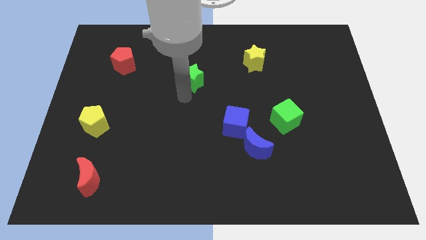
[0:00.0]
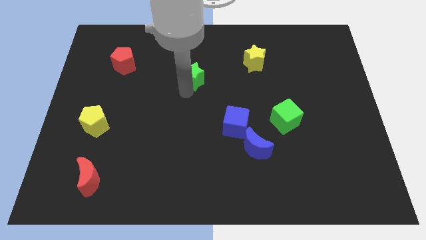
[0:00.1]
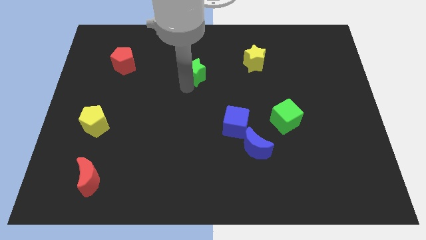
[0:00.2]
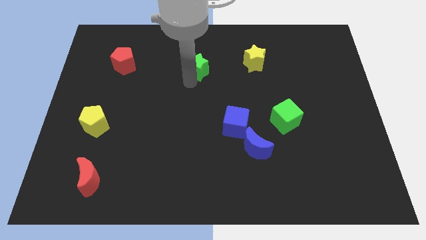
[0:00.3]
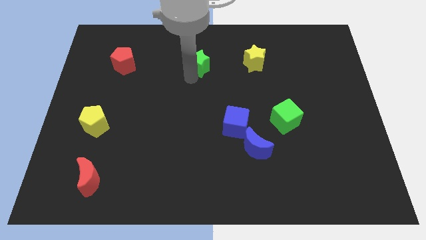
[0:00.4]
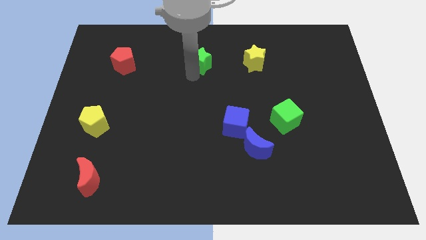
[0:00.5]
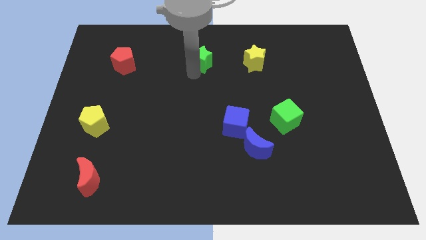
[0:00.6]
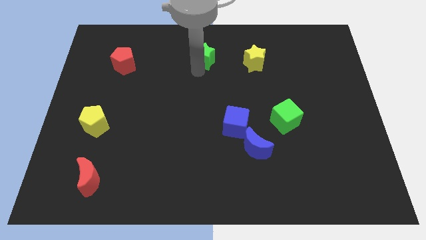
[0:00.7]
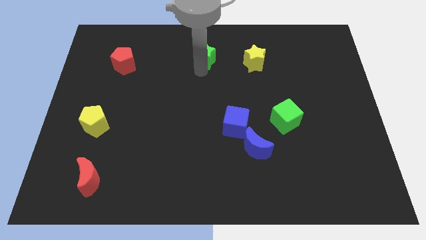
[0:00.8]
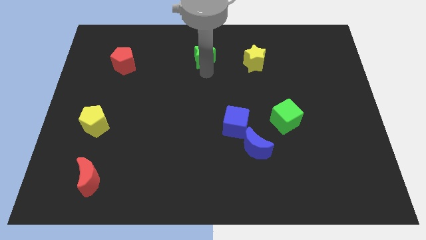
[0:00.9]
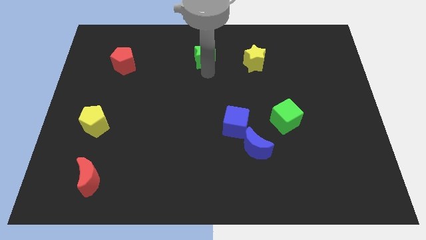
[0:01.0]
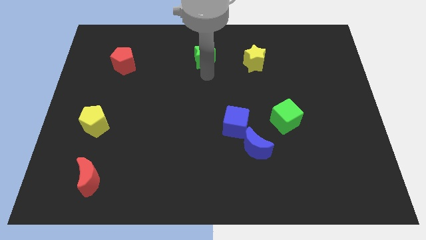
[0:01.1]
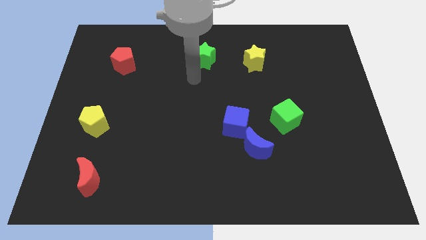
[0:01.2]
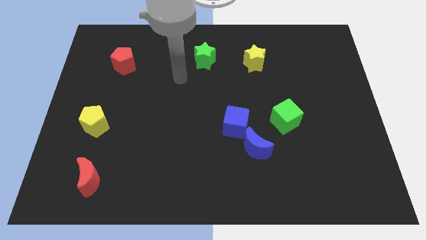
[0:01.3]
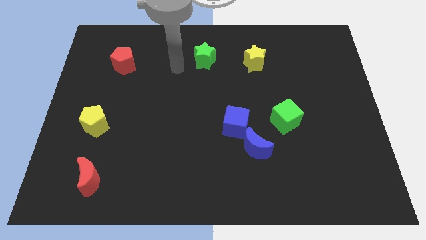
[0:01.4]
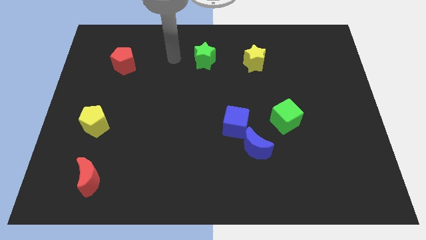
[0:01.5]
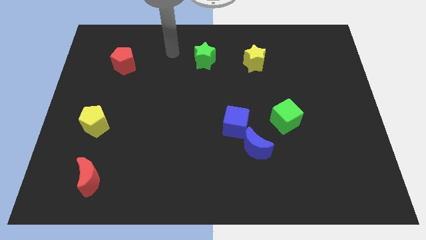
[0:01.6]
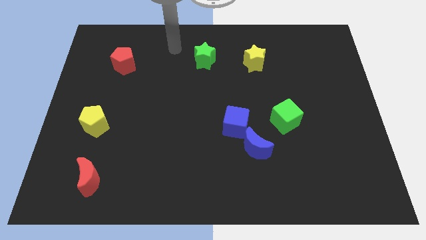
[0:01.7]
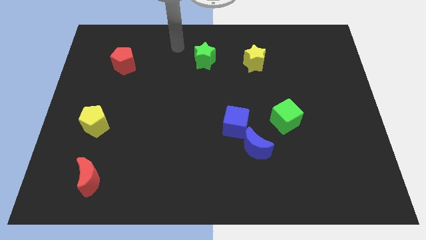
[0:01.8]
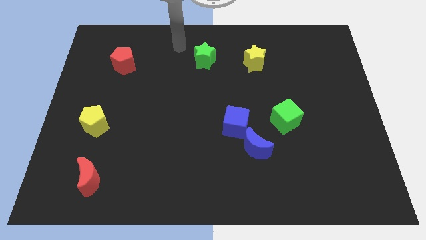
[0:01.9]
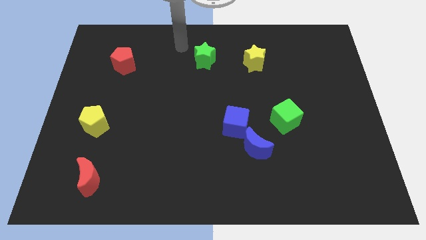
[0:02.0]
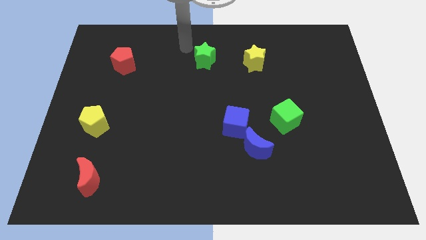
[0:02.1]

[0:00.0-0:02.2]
move the green star to the left of the yellow star

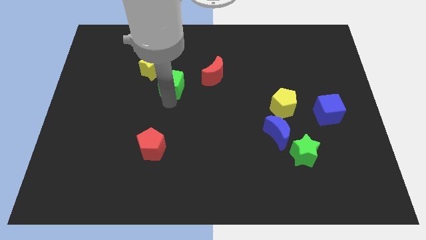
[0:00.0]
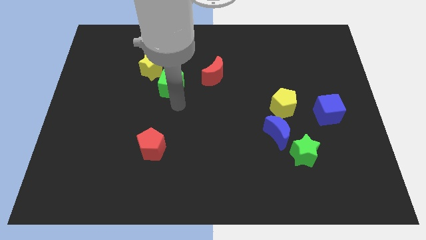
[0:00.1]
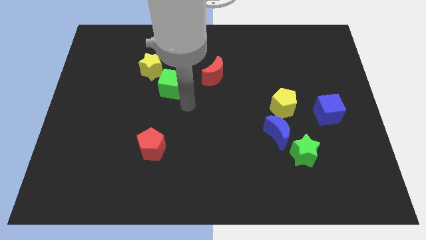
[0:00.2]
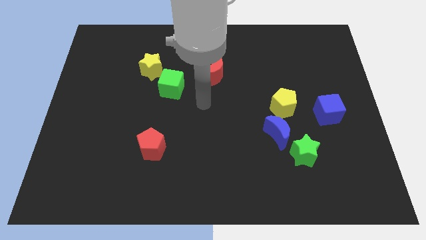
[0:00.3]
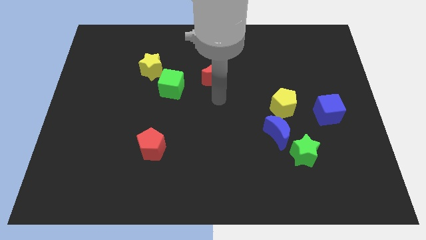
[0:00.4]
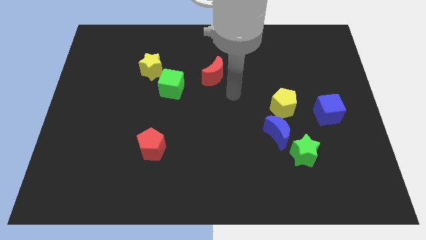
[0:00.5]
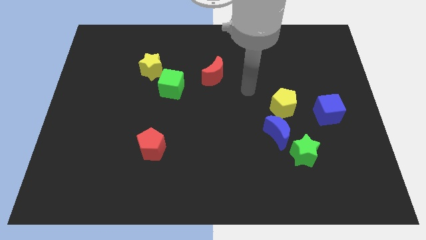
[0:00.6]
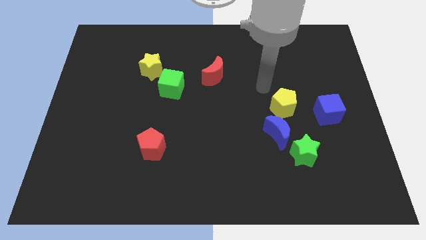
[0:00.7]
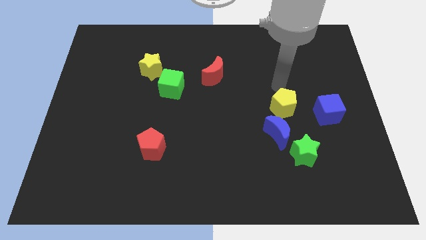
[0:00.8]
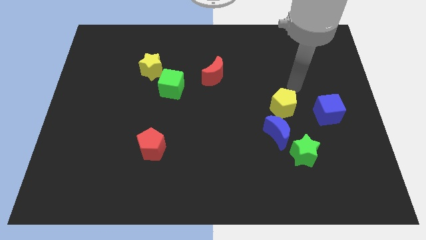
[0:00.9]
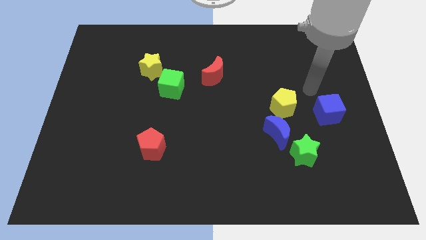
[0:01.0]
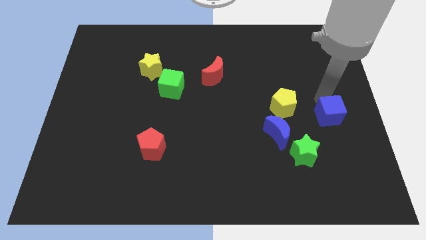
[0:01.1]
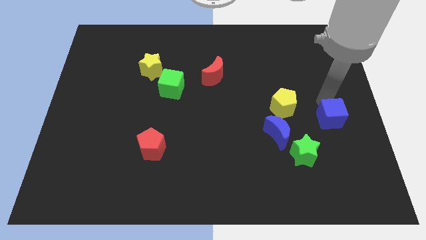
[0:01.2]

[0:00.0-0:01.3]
place your arm towards the top side of the blue cube

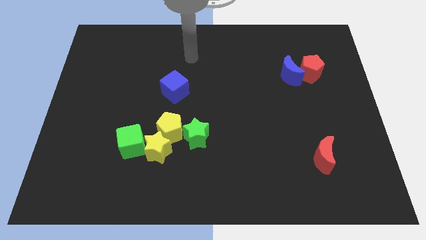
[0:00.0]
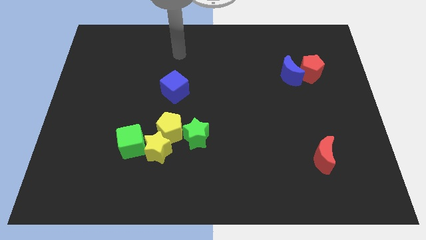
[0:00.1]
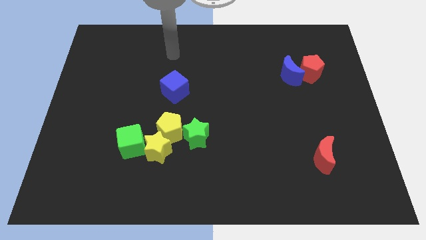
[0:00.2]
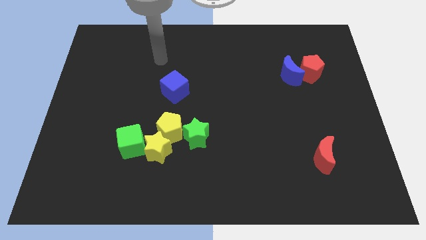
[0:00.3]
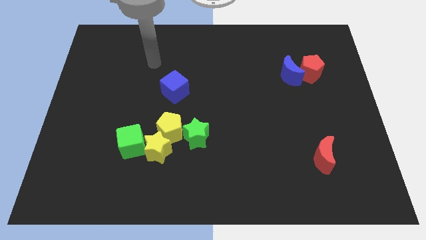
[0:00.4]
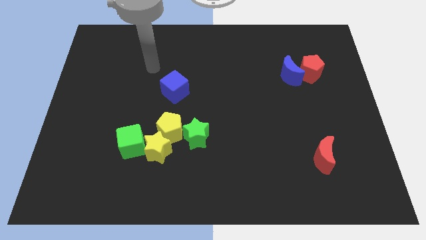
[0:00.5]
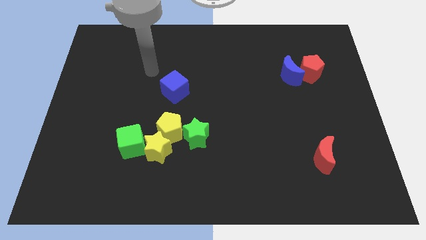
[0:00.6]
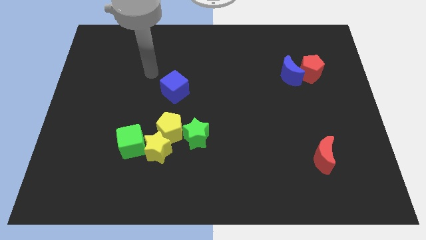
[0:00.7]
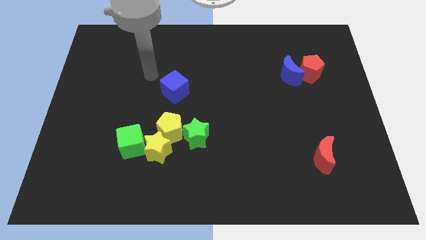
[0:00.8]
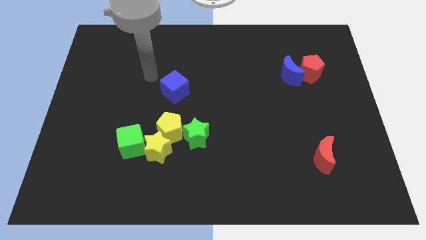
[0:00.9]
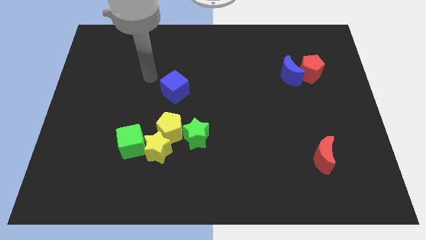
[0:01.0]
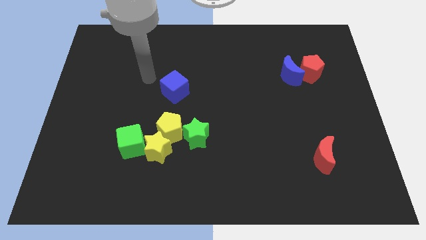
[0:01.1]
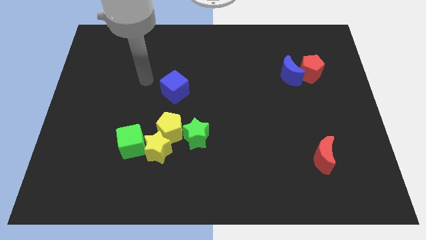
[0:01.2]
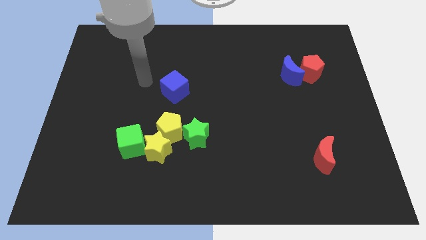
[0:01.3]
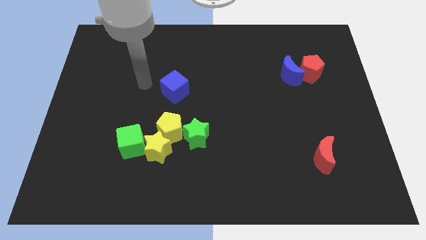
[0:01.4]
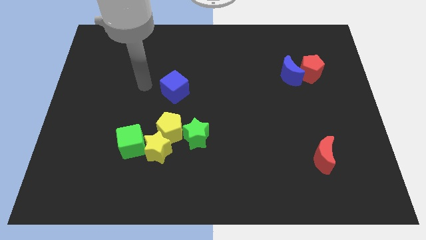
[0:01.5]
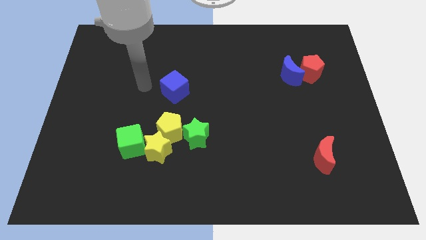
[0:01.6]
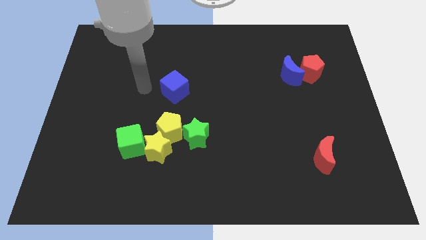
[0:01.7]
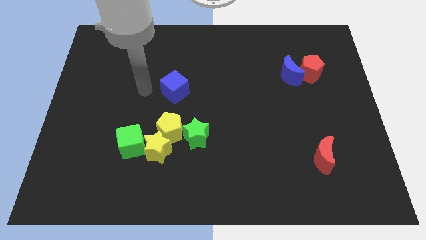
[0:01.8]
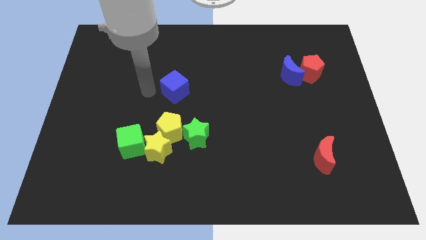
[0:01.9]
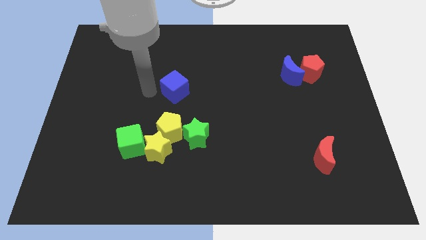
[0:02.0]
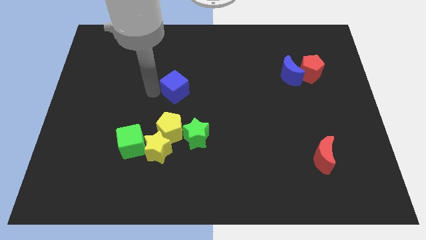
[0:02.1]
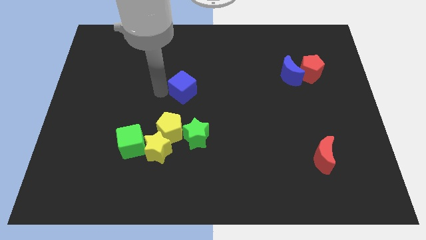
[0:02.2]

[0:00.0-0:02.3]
slightly push blue cube to the center

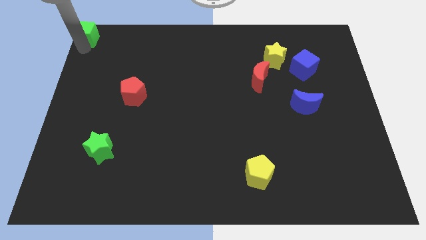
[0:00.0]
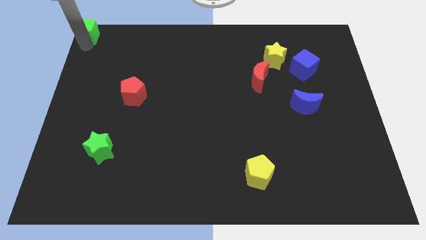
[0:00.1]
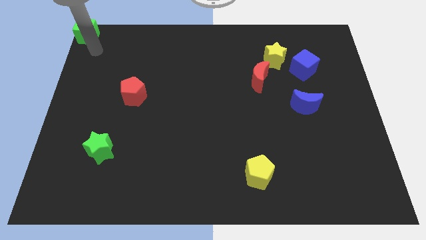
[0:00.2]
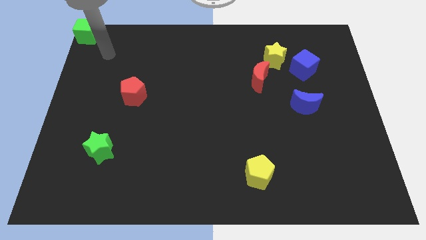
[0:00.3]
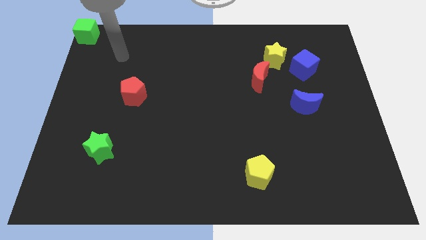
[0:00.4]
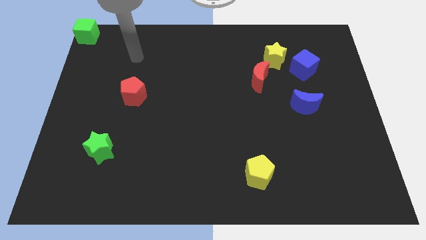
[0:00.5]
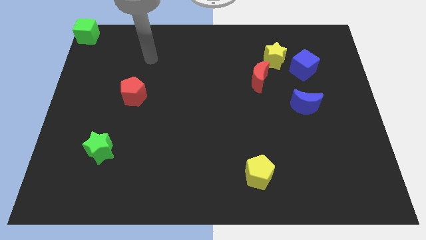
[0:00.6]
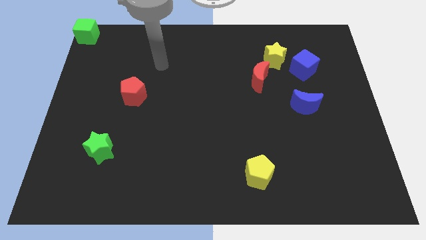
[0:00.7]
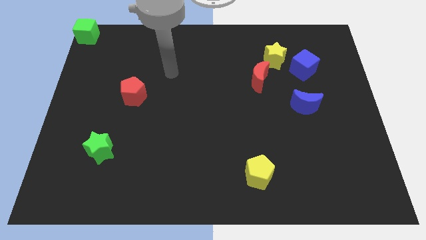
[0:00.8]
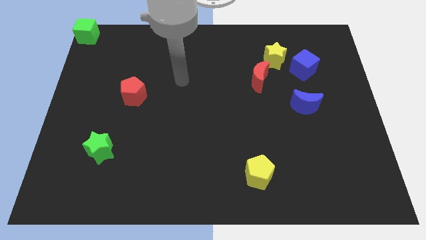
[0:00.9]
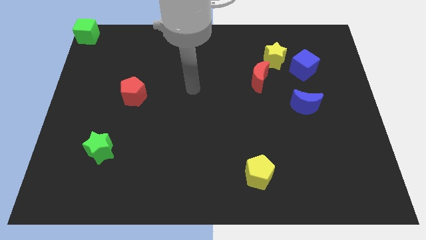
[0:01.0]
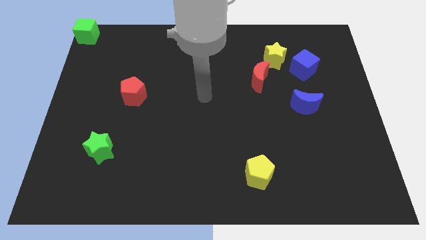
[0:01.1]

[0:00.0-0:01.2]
move the arm near the center of the board

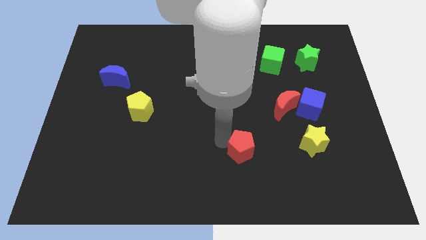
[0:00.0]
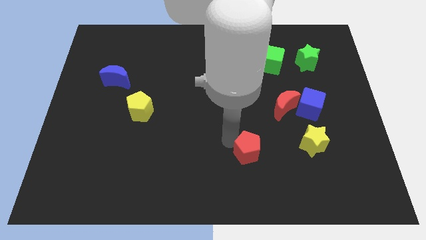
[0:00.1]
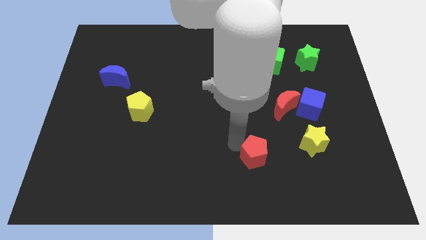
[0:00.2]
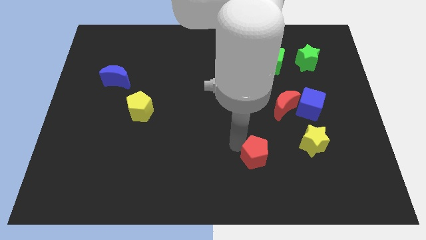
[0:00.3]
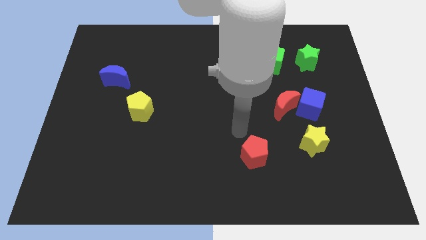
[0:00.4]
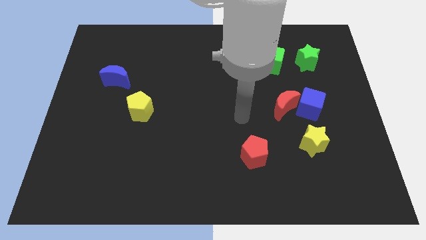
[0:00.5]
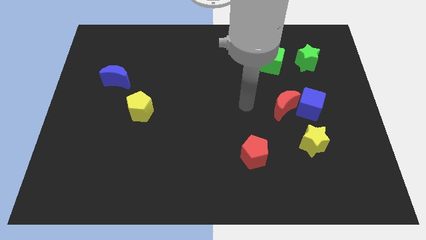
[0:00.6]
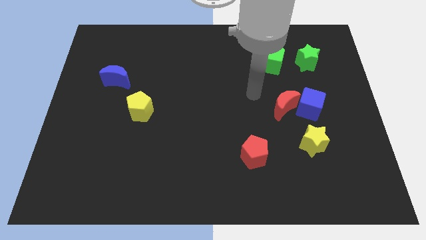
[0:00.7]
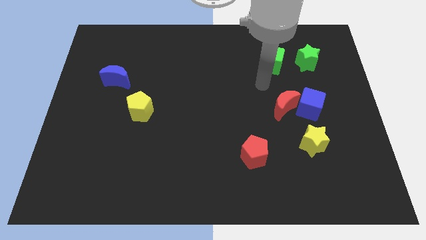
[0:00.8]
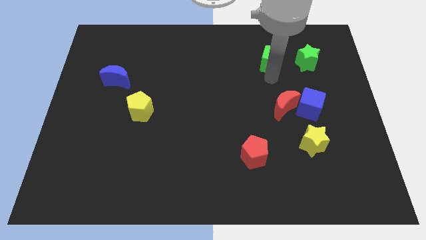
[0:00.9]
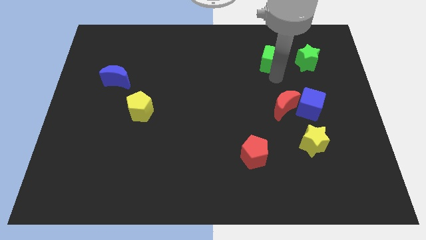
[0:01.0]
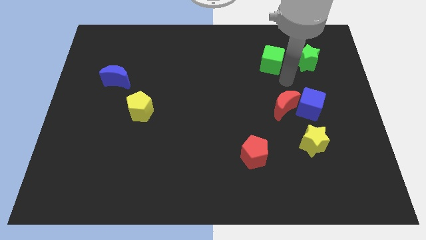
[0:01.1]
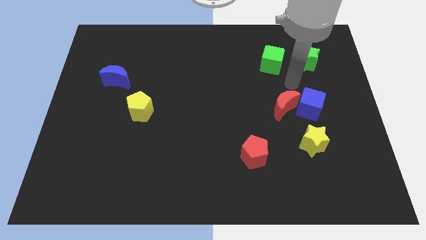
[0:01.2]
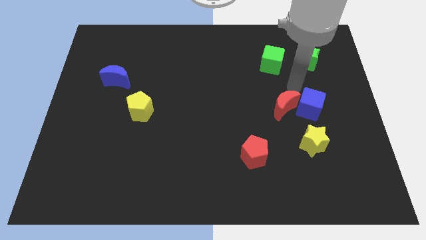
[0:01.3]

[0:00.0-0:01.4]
move your arm away from the red pentagon

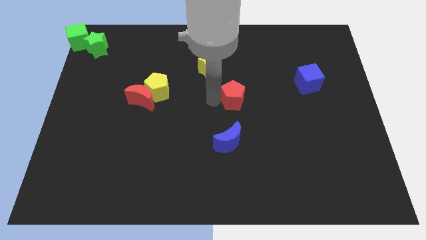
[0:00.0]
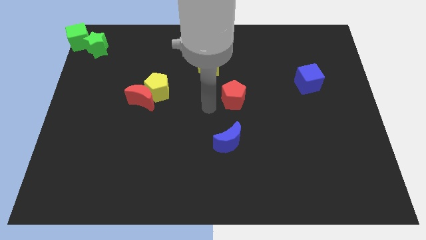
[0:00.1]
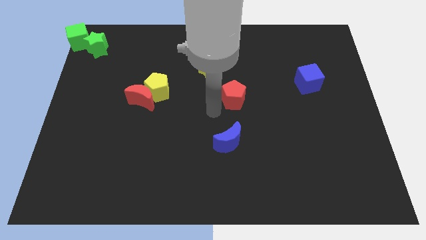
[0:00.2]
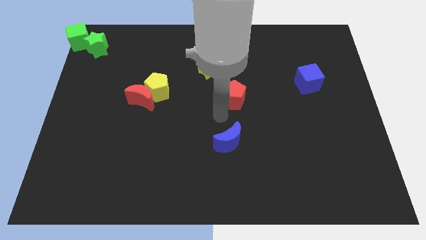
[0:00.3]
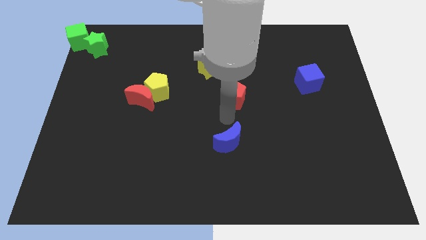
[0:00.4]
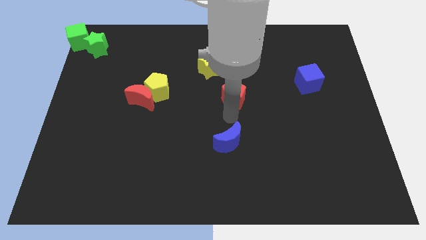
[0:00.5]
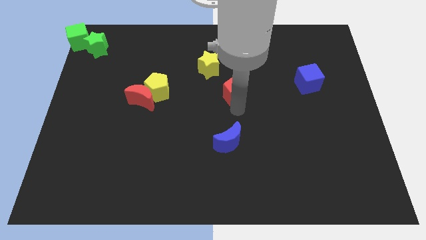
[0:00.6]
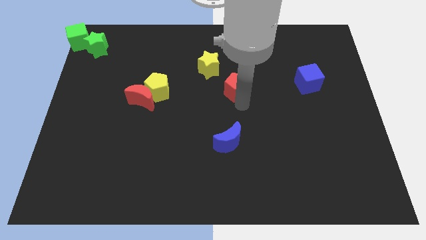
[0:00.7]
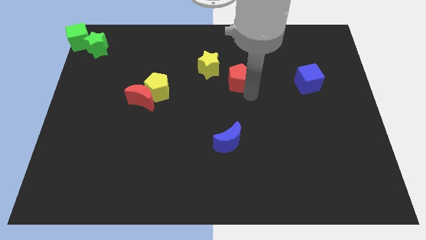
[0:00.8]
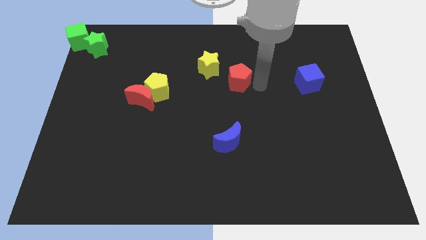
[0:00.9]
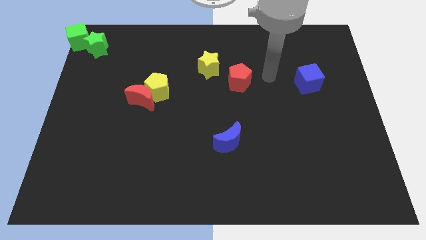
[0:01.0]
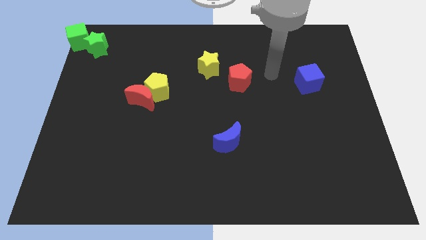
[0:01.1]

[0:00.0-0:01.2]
slide the red pentagon parallel to the left of the blue cube
